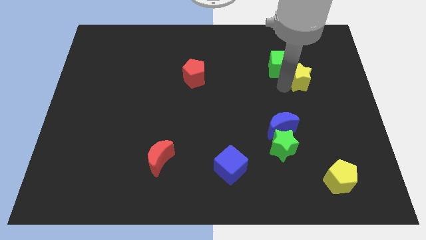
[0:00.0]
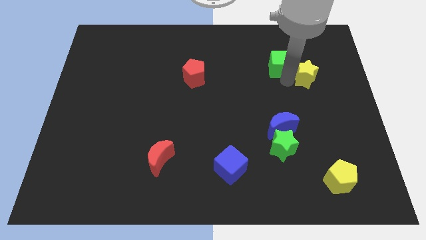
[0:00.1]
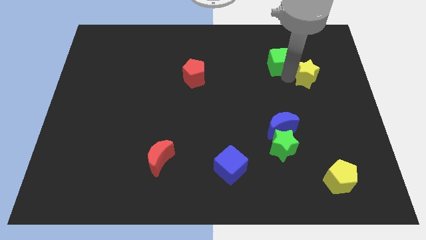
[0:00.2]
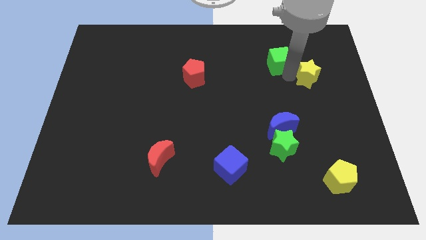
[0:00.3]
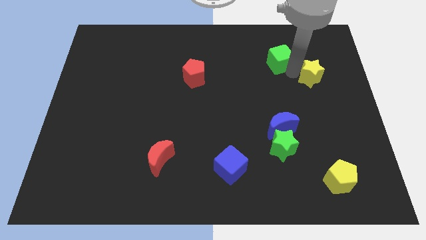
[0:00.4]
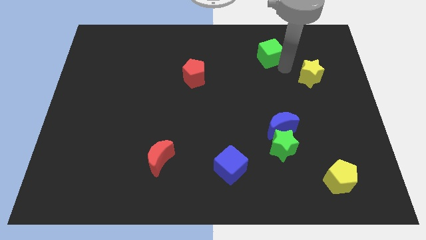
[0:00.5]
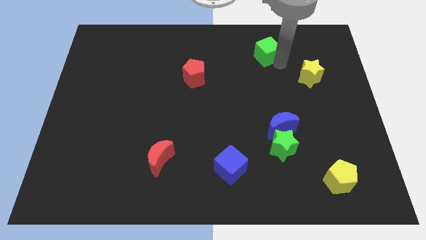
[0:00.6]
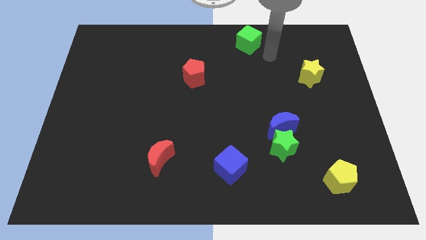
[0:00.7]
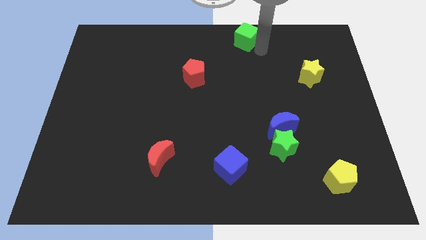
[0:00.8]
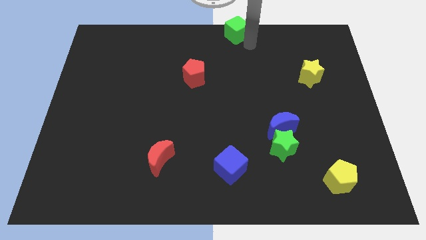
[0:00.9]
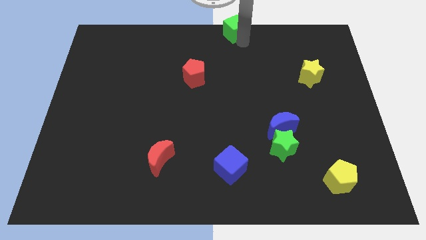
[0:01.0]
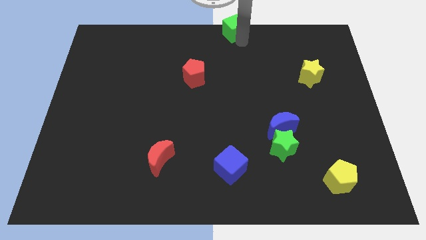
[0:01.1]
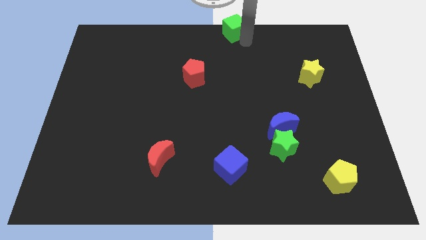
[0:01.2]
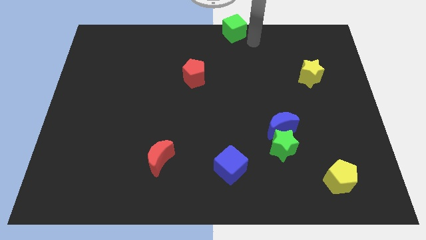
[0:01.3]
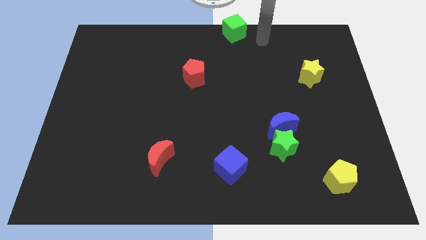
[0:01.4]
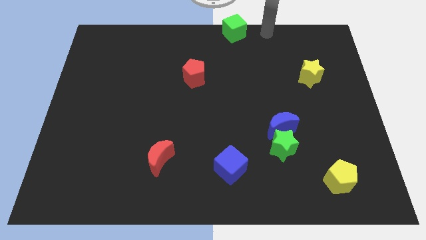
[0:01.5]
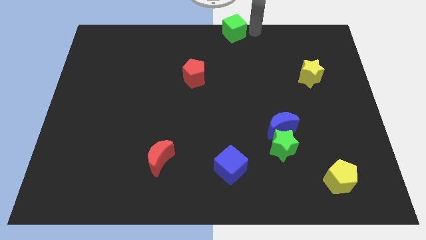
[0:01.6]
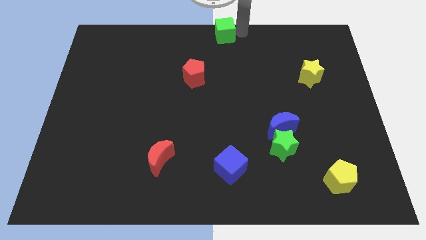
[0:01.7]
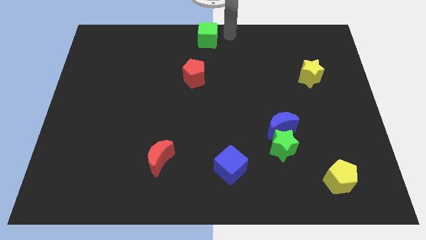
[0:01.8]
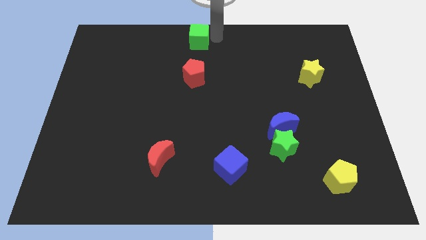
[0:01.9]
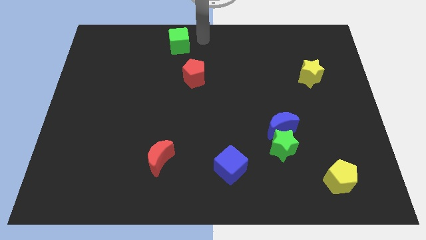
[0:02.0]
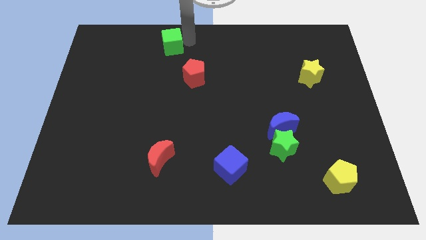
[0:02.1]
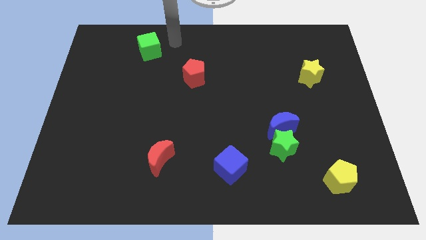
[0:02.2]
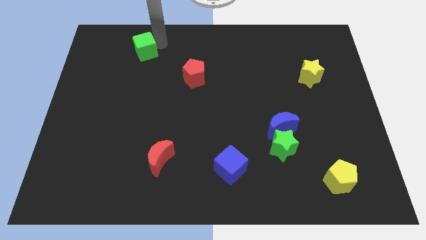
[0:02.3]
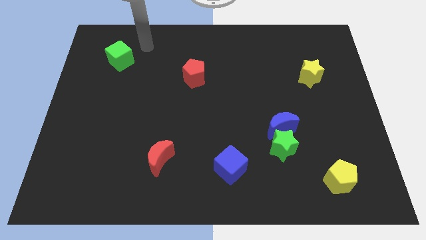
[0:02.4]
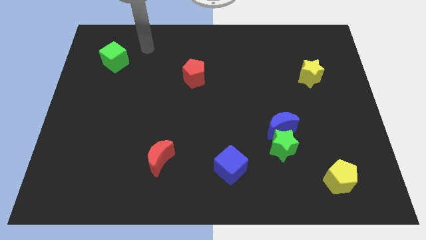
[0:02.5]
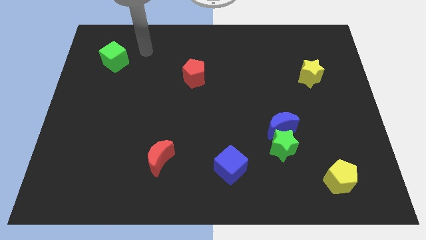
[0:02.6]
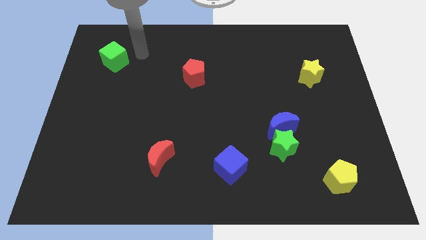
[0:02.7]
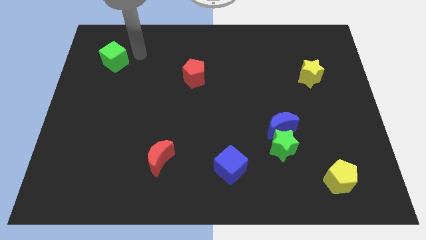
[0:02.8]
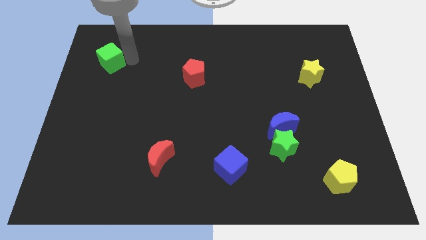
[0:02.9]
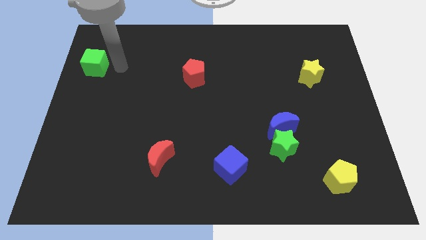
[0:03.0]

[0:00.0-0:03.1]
move the green cube horizontally left to the red pentagon

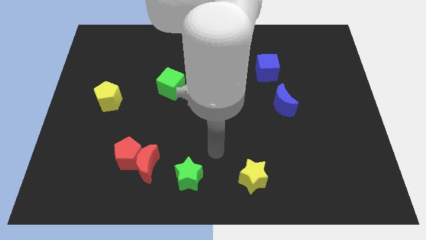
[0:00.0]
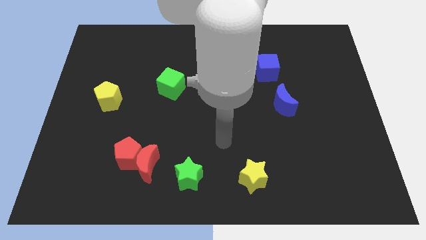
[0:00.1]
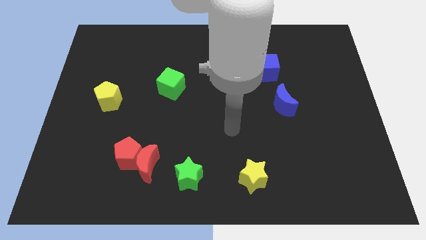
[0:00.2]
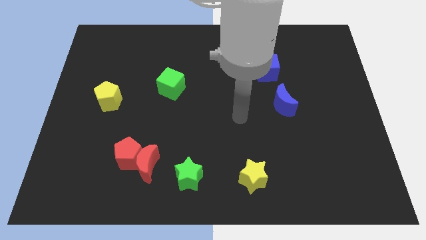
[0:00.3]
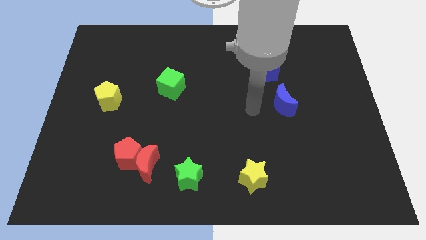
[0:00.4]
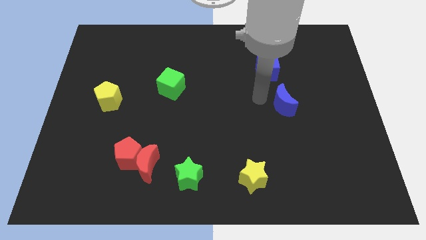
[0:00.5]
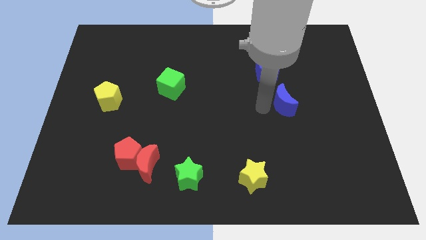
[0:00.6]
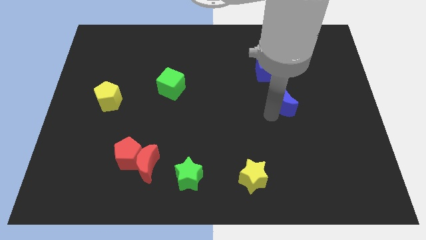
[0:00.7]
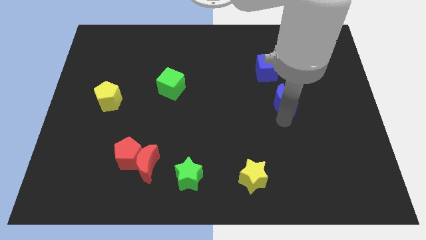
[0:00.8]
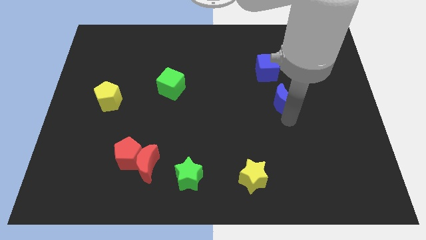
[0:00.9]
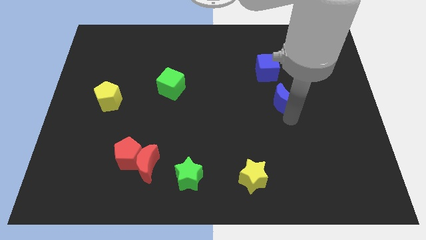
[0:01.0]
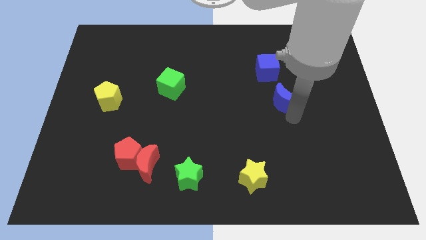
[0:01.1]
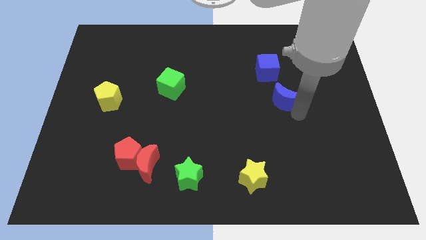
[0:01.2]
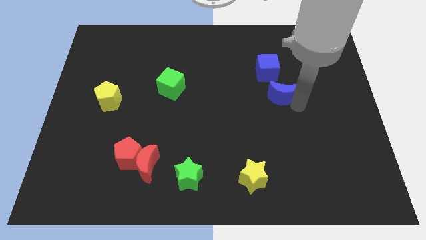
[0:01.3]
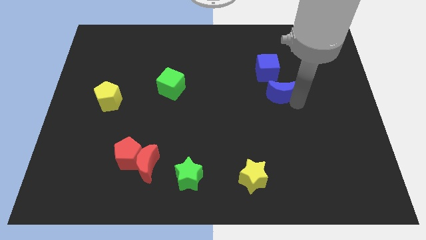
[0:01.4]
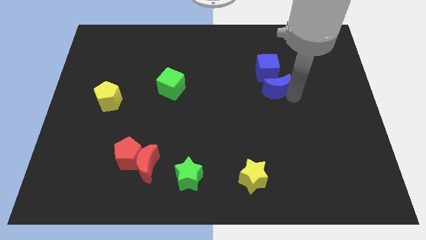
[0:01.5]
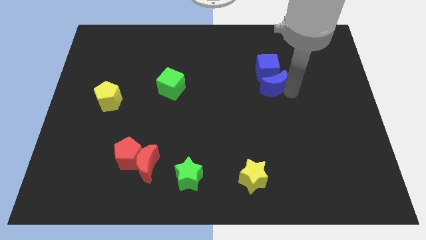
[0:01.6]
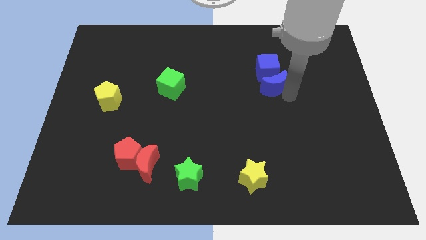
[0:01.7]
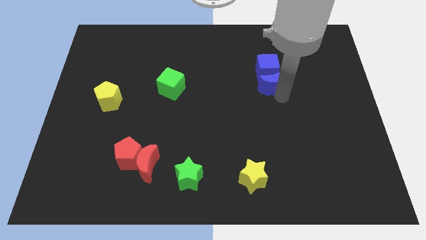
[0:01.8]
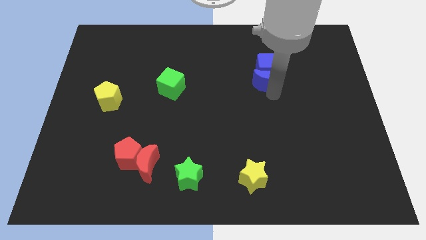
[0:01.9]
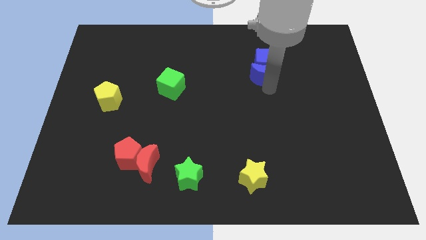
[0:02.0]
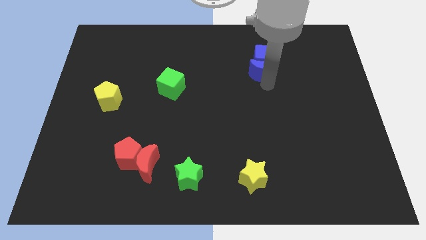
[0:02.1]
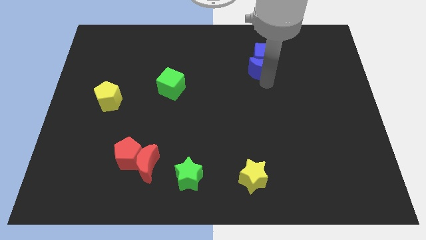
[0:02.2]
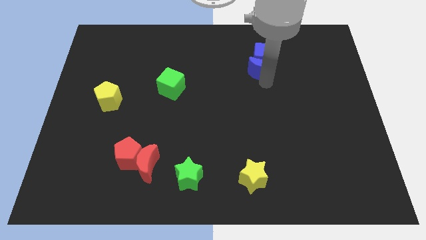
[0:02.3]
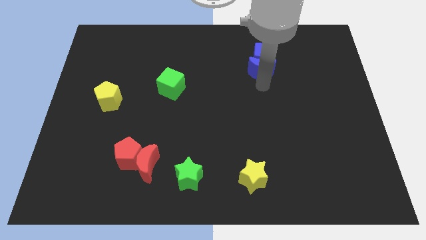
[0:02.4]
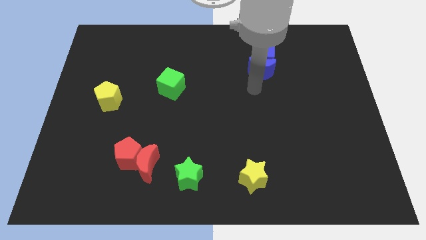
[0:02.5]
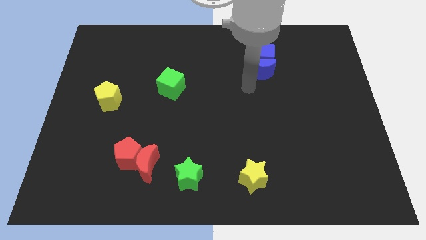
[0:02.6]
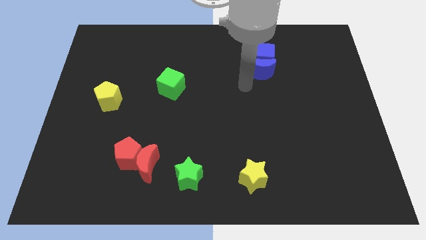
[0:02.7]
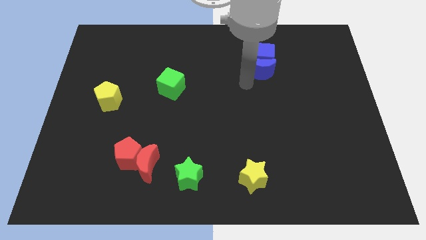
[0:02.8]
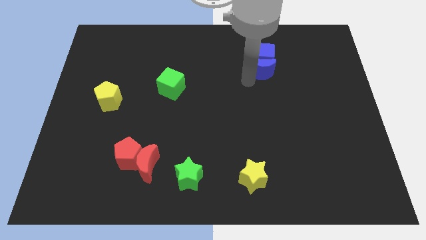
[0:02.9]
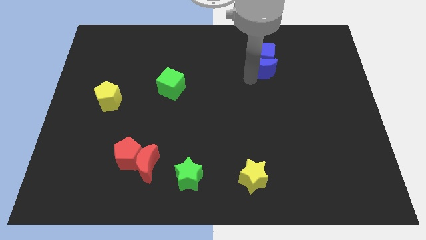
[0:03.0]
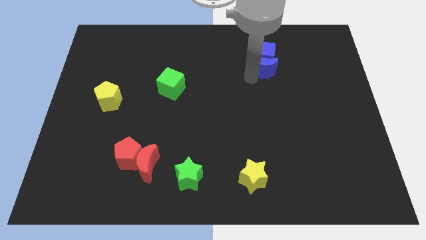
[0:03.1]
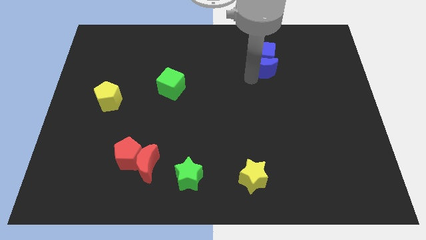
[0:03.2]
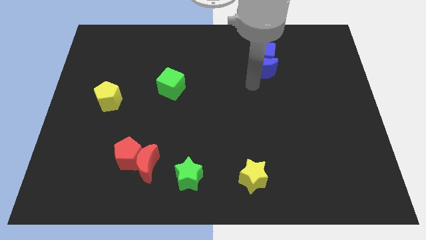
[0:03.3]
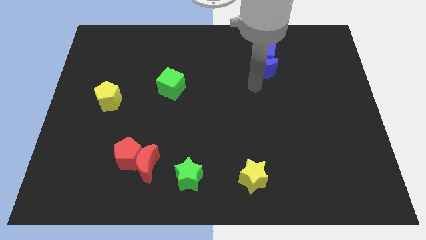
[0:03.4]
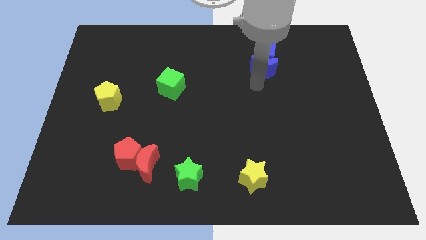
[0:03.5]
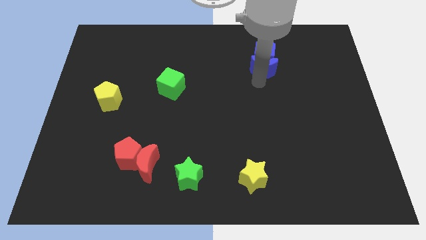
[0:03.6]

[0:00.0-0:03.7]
push the blue blocks towards the top side of the board

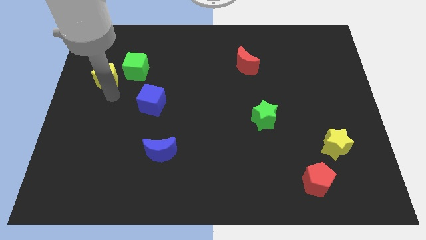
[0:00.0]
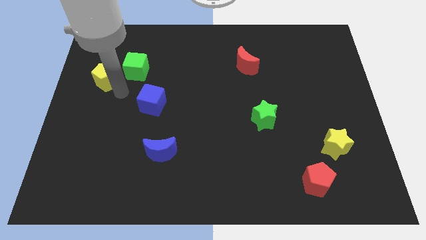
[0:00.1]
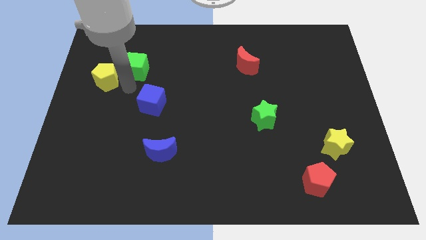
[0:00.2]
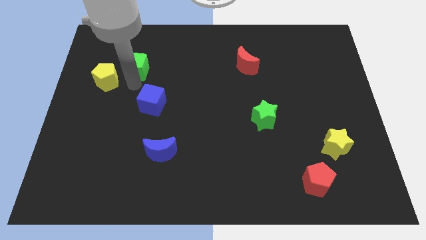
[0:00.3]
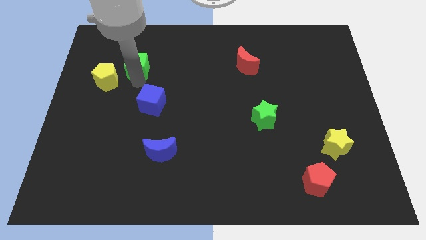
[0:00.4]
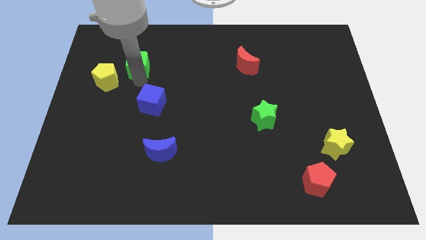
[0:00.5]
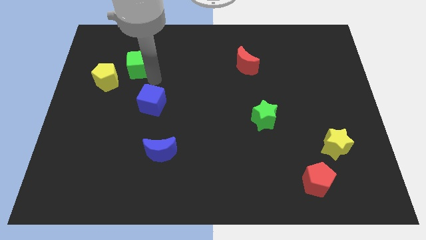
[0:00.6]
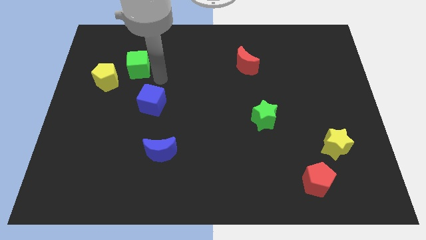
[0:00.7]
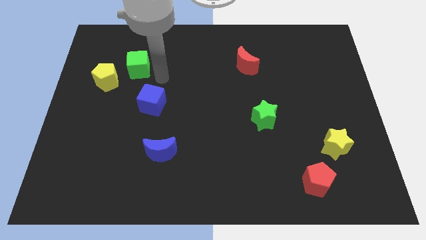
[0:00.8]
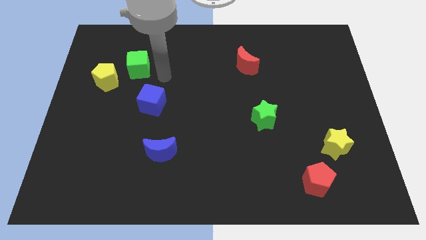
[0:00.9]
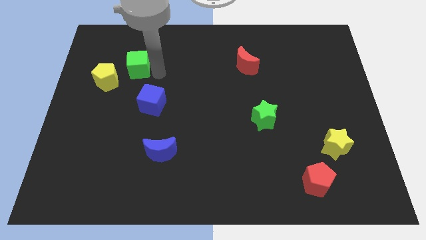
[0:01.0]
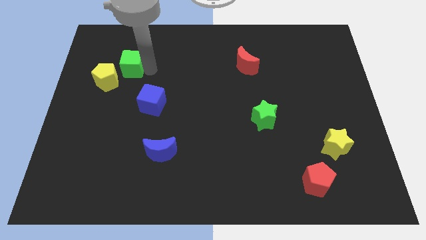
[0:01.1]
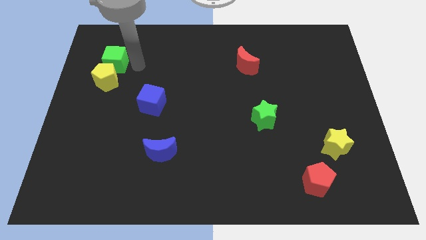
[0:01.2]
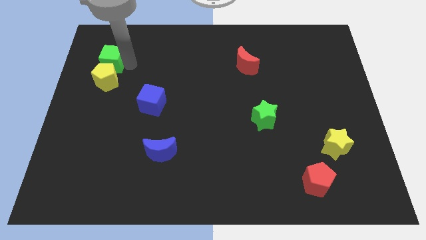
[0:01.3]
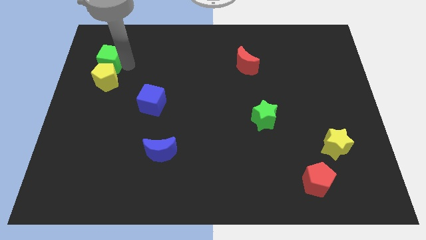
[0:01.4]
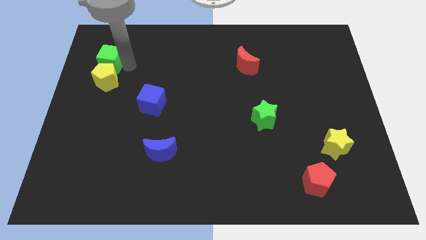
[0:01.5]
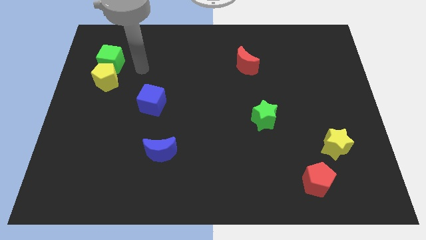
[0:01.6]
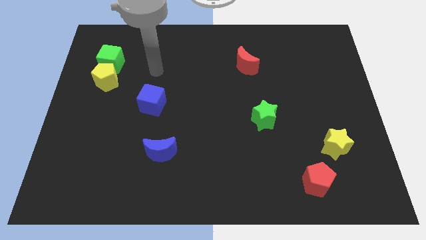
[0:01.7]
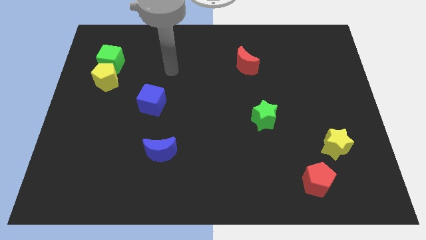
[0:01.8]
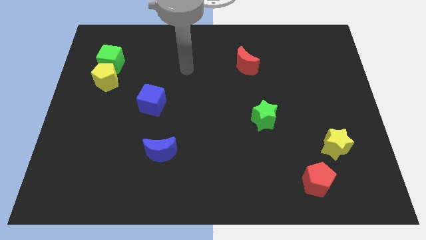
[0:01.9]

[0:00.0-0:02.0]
push the green cube into yellow pentagon
